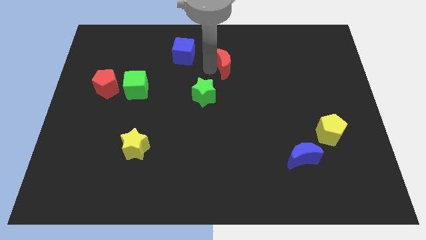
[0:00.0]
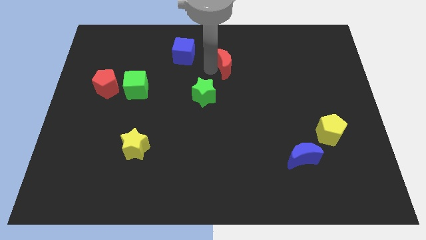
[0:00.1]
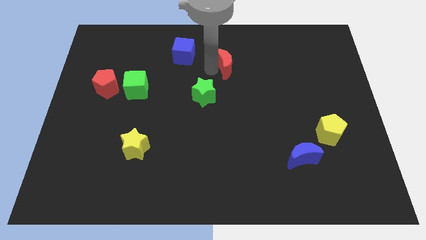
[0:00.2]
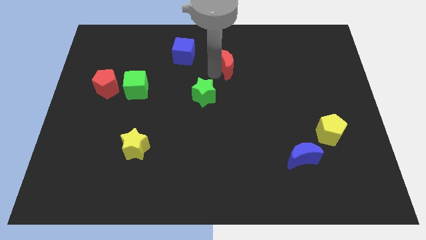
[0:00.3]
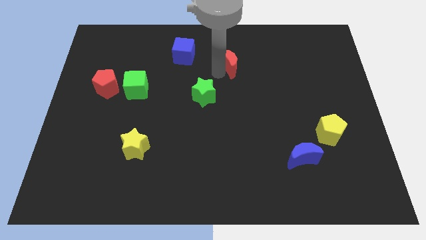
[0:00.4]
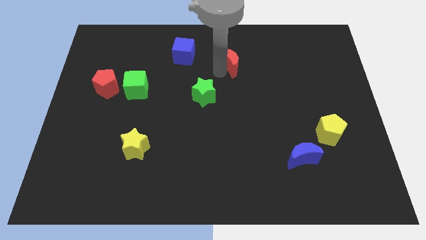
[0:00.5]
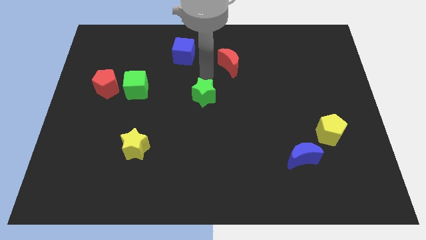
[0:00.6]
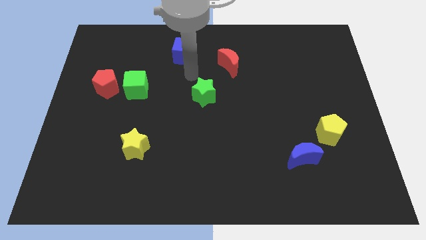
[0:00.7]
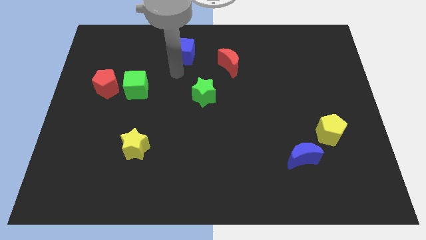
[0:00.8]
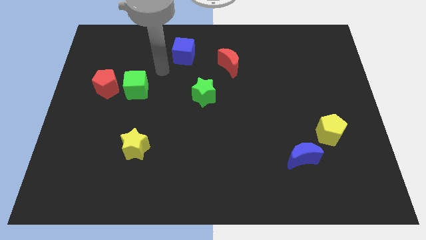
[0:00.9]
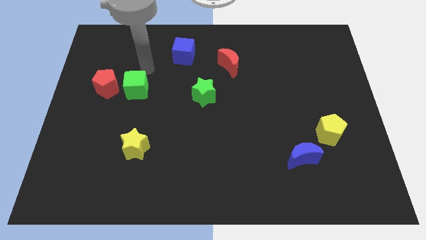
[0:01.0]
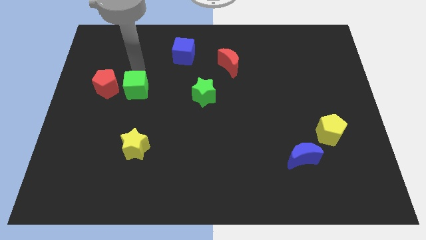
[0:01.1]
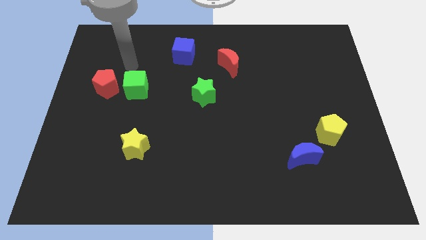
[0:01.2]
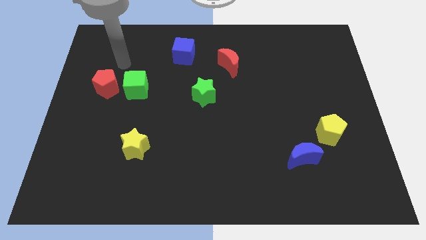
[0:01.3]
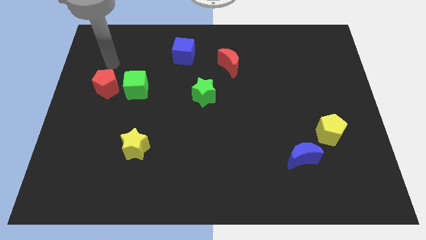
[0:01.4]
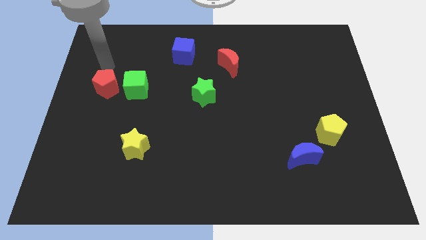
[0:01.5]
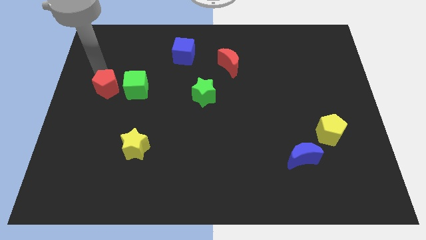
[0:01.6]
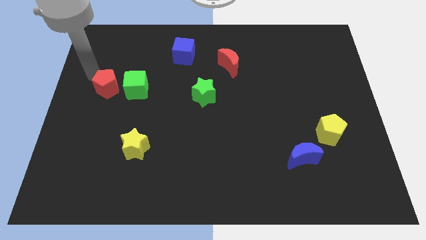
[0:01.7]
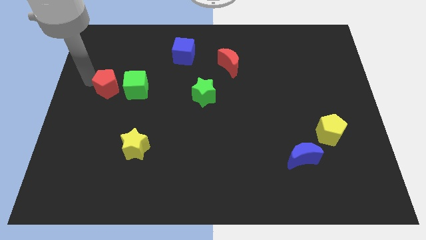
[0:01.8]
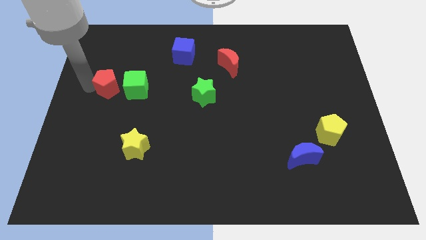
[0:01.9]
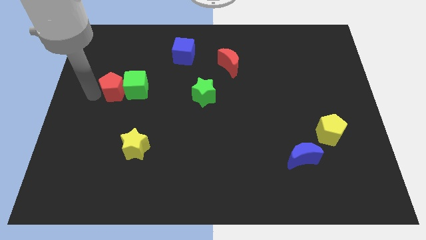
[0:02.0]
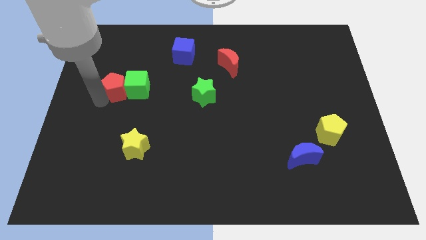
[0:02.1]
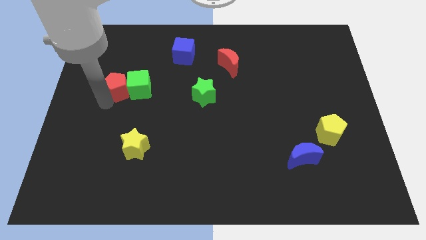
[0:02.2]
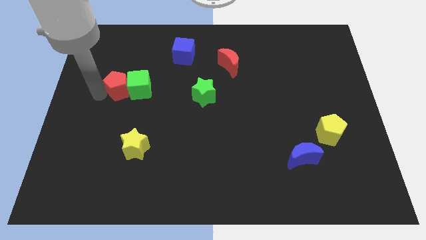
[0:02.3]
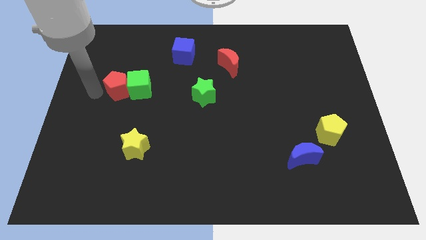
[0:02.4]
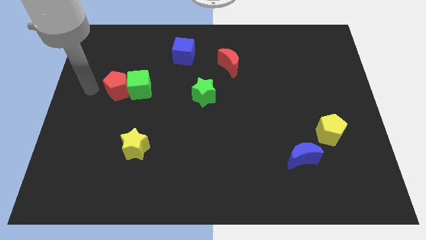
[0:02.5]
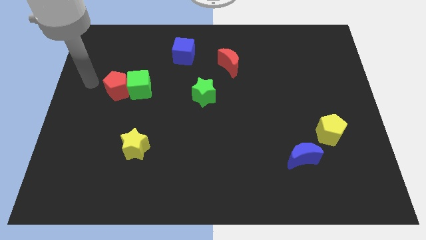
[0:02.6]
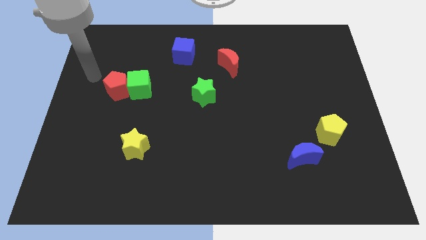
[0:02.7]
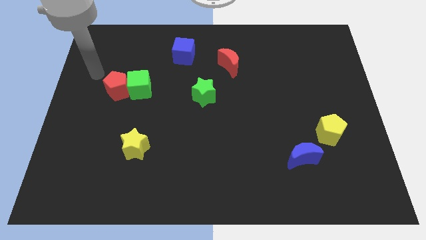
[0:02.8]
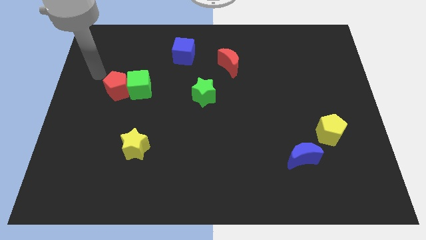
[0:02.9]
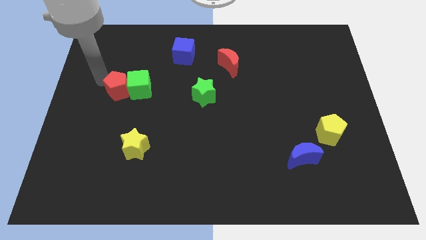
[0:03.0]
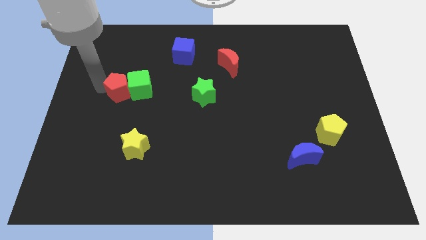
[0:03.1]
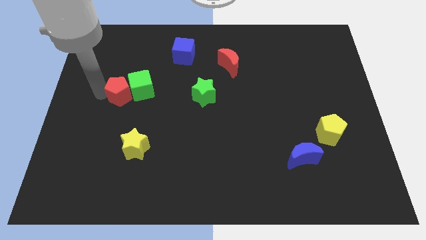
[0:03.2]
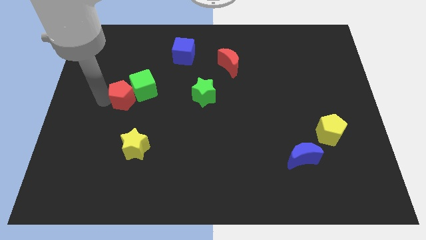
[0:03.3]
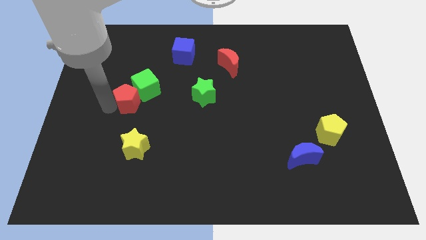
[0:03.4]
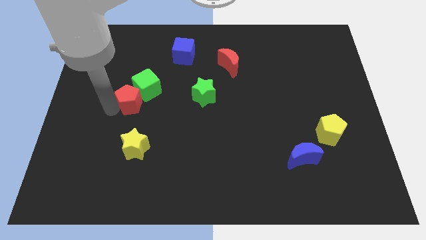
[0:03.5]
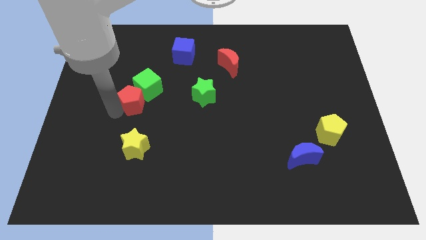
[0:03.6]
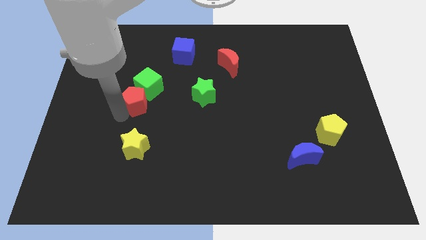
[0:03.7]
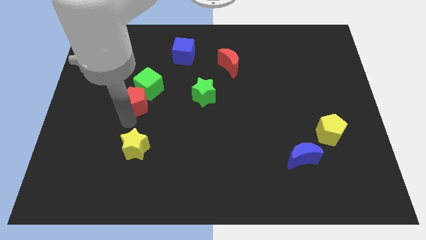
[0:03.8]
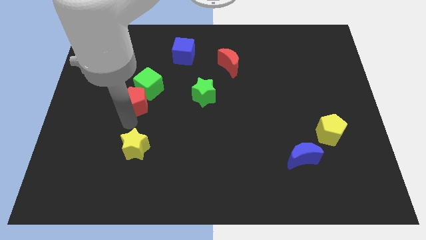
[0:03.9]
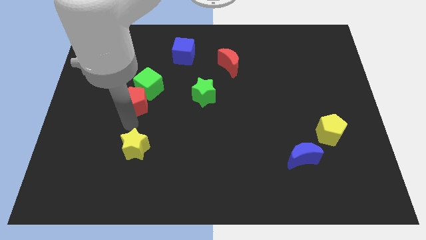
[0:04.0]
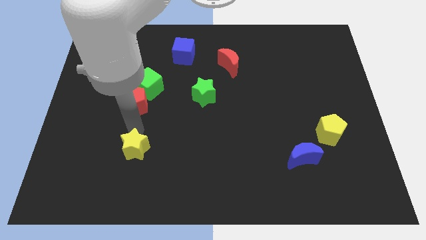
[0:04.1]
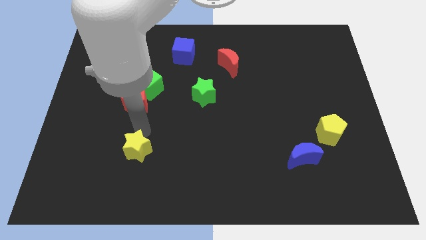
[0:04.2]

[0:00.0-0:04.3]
slide the green cube upwards with a red pentagon

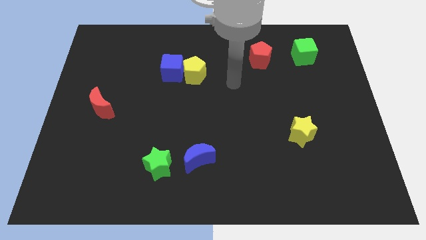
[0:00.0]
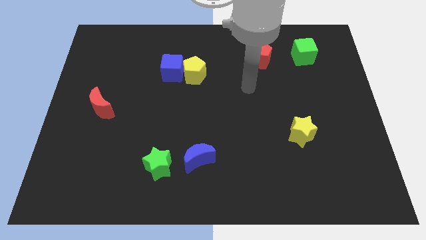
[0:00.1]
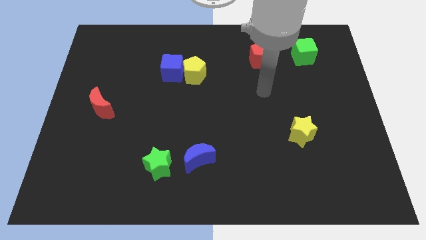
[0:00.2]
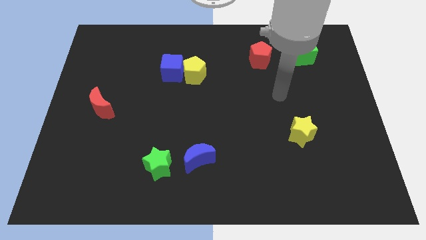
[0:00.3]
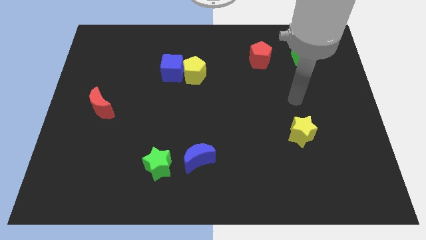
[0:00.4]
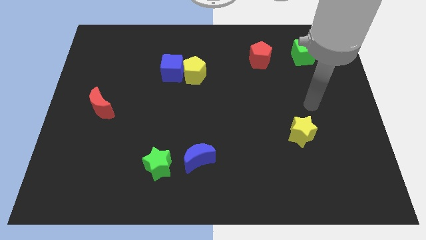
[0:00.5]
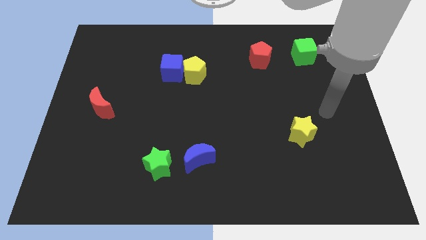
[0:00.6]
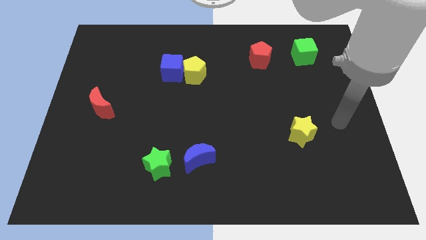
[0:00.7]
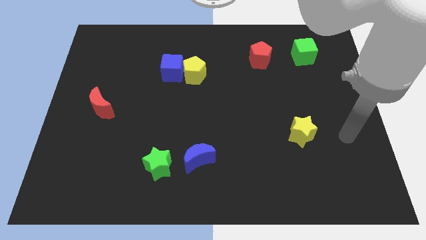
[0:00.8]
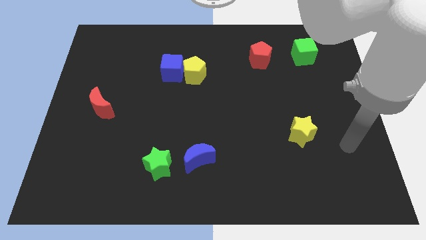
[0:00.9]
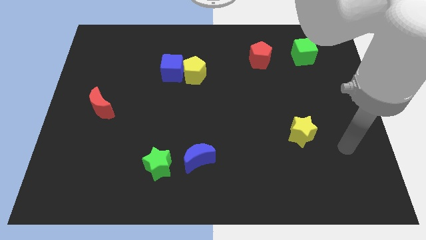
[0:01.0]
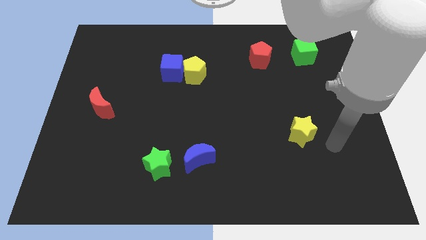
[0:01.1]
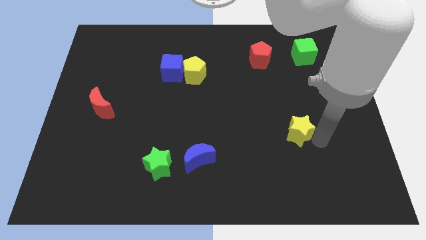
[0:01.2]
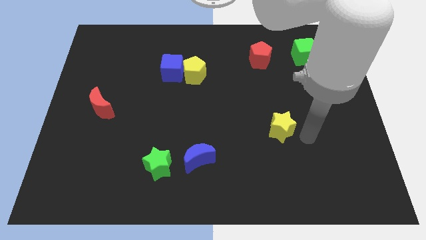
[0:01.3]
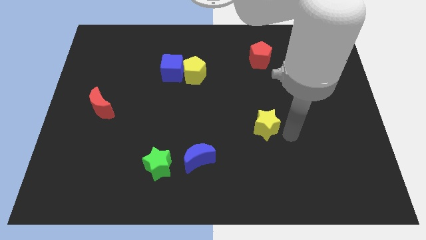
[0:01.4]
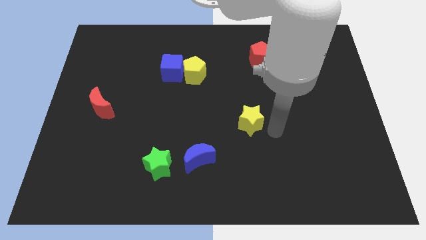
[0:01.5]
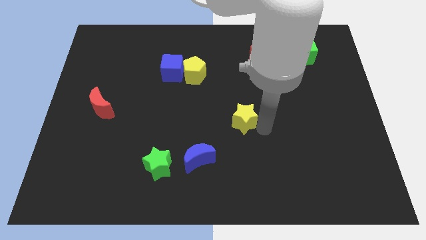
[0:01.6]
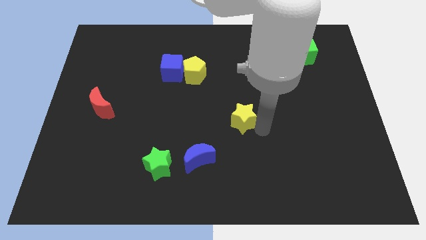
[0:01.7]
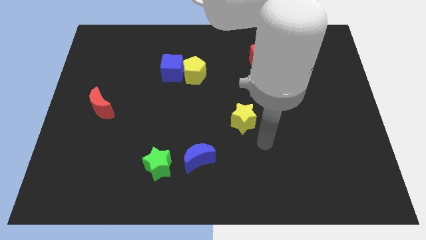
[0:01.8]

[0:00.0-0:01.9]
push yellow star towards the center of the board

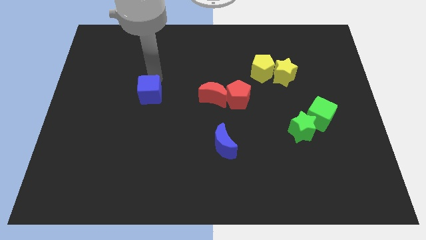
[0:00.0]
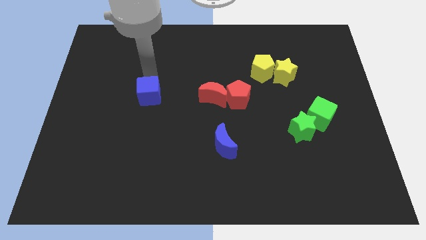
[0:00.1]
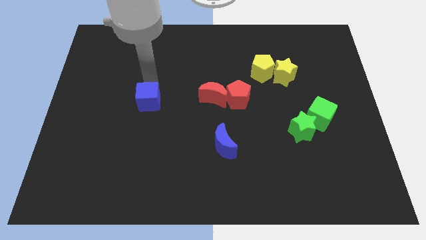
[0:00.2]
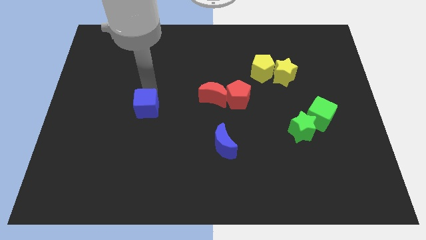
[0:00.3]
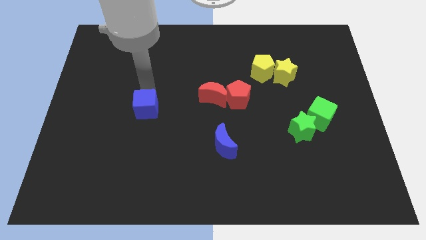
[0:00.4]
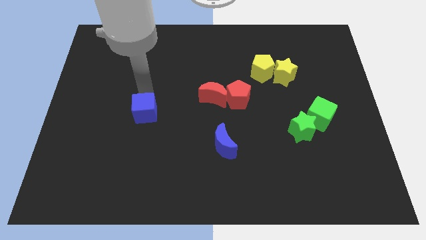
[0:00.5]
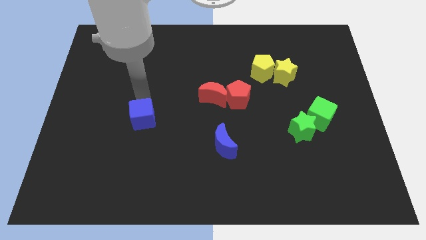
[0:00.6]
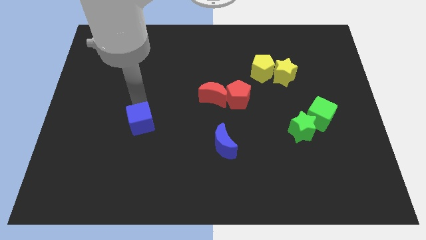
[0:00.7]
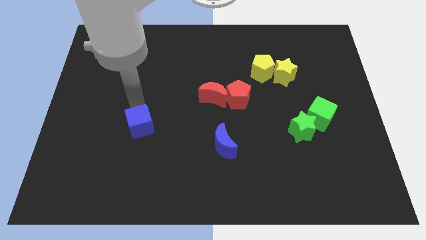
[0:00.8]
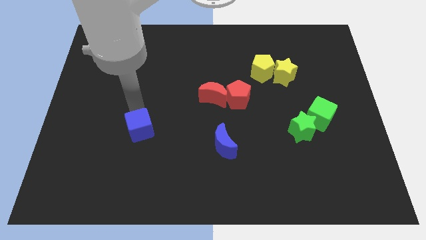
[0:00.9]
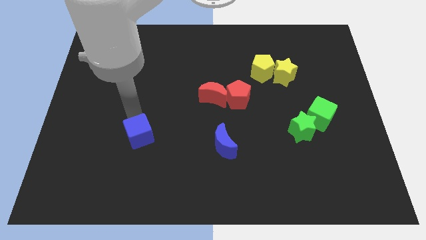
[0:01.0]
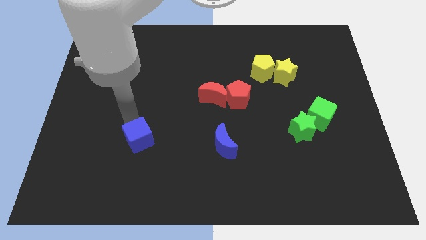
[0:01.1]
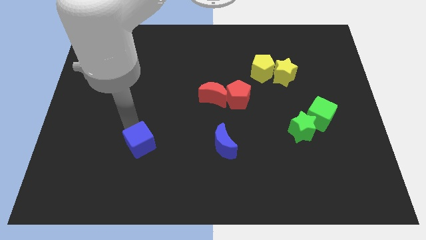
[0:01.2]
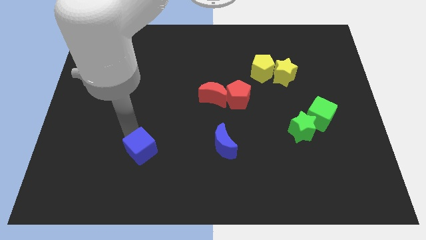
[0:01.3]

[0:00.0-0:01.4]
put the blue cube parallel to blue moon

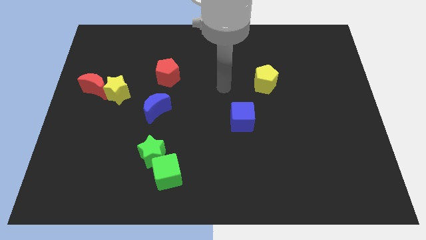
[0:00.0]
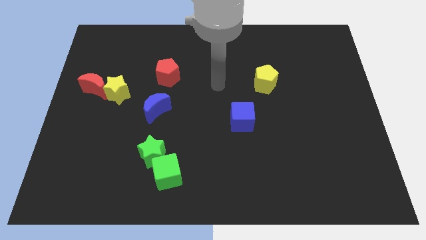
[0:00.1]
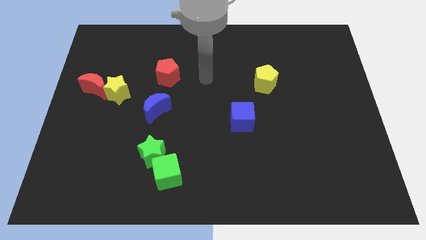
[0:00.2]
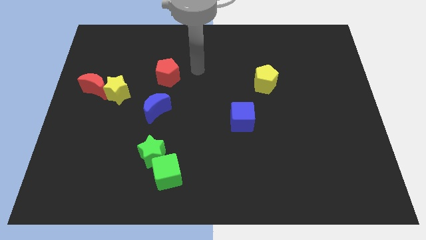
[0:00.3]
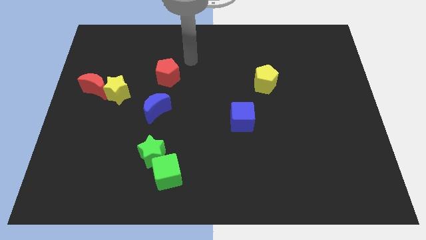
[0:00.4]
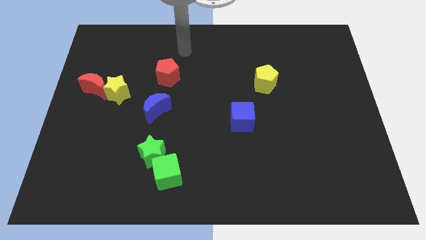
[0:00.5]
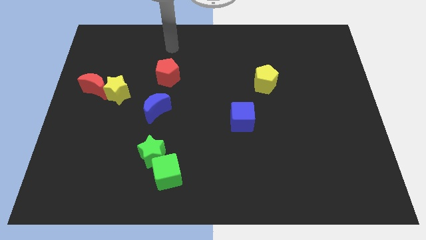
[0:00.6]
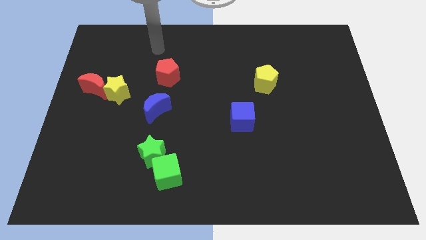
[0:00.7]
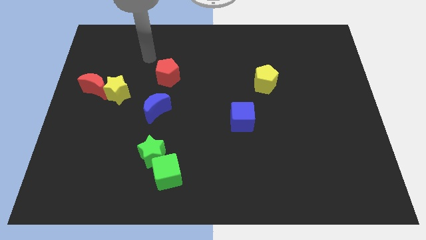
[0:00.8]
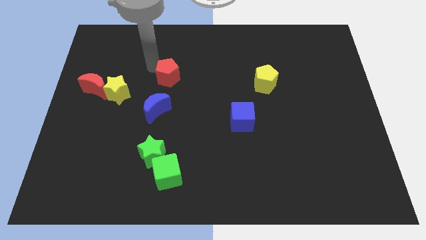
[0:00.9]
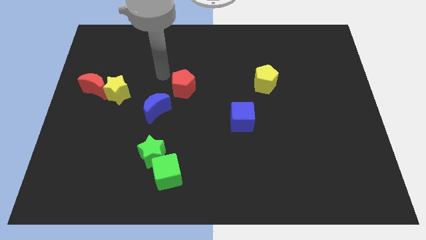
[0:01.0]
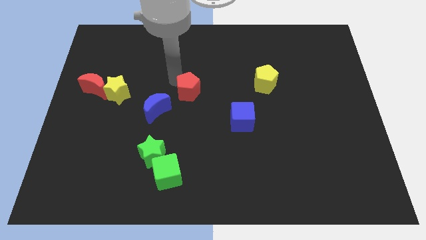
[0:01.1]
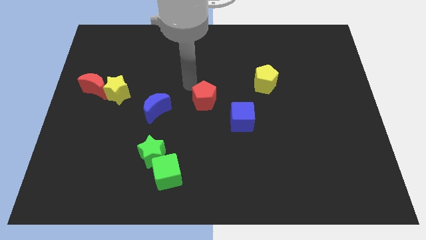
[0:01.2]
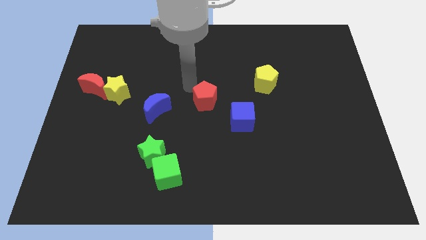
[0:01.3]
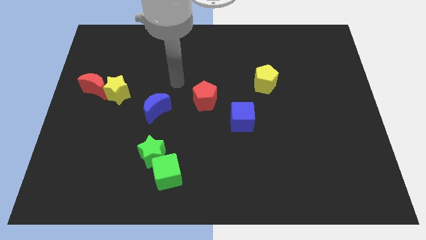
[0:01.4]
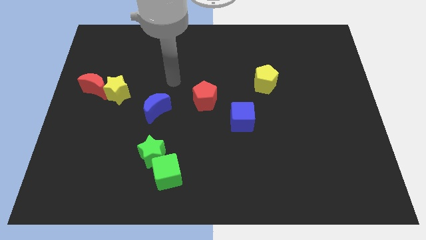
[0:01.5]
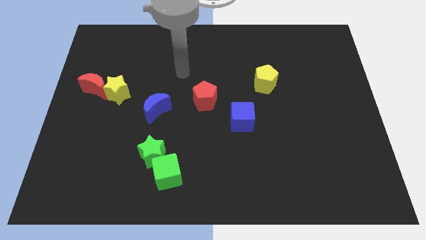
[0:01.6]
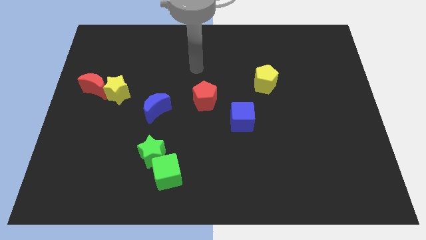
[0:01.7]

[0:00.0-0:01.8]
place the red pentagon at the center of the board
